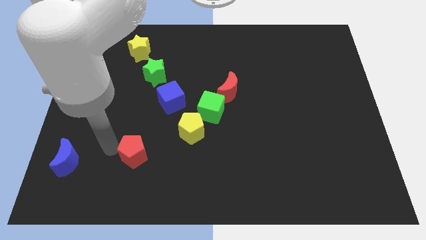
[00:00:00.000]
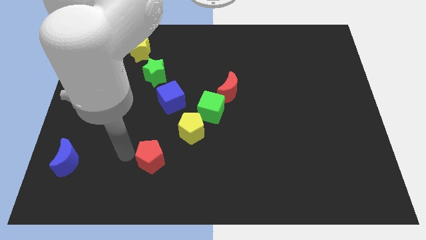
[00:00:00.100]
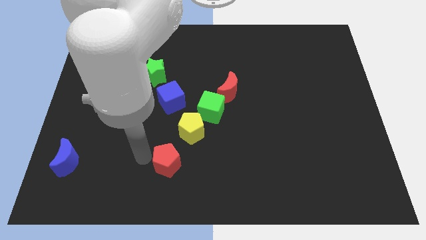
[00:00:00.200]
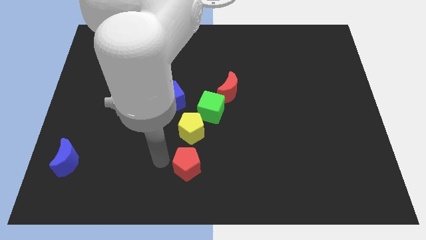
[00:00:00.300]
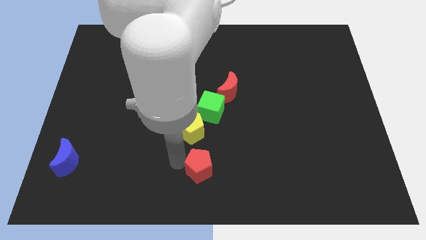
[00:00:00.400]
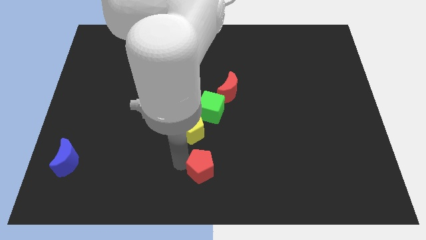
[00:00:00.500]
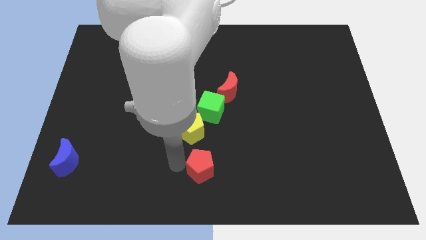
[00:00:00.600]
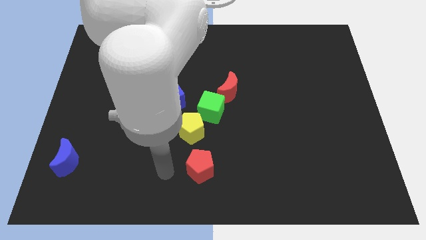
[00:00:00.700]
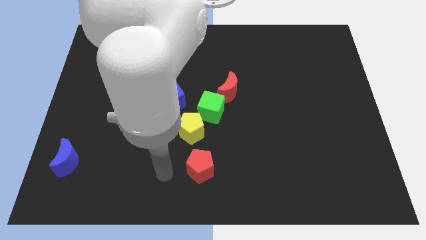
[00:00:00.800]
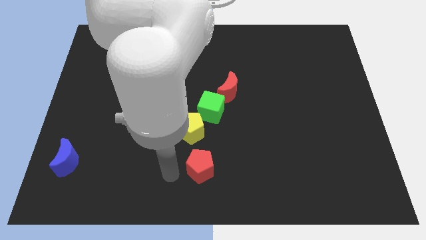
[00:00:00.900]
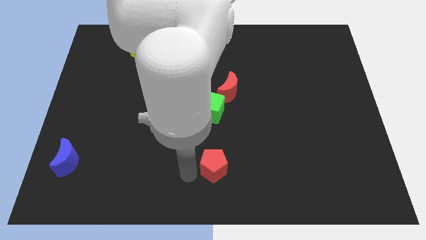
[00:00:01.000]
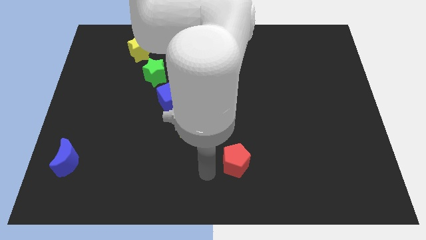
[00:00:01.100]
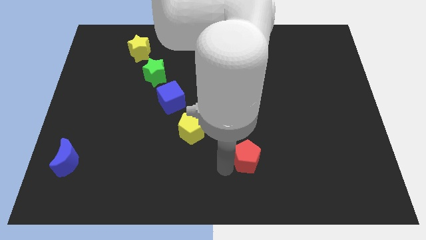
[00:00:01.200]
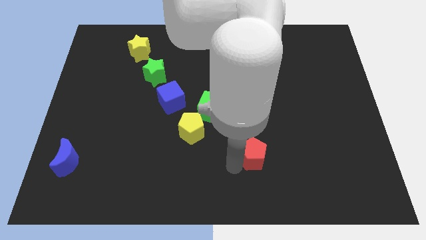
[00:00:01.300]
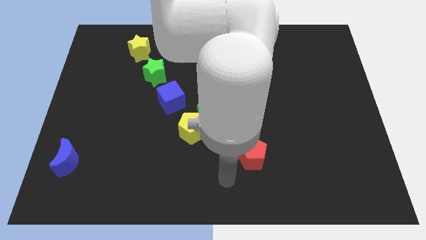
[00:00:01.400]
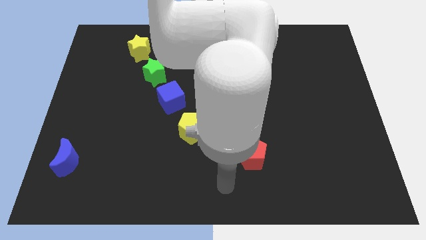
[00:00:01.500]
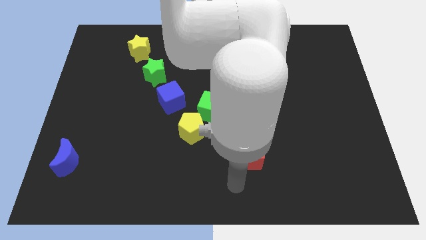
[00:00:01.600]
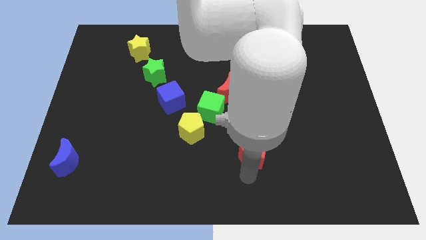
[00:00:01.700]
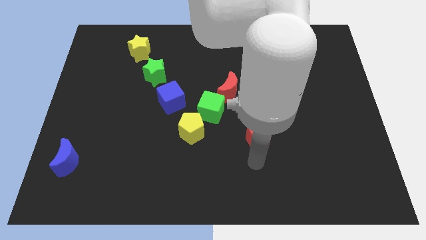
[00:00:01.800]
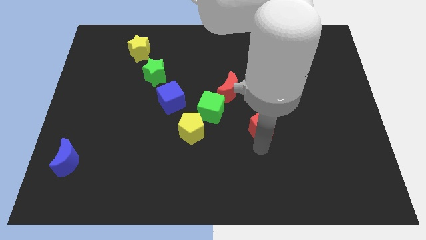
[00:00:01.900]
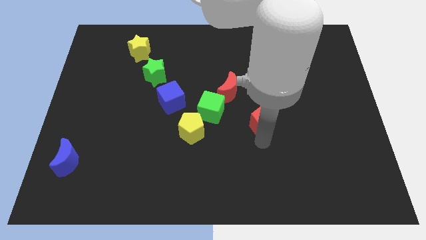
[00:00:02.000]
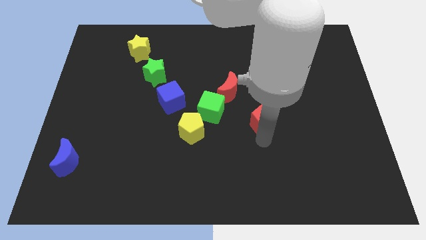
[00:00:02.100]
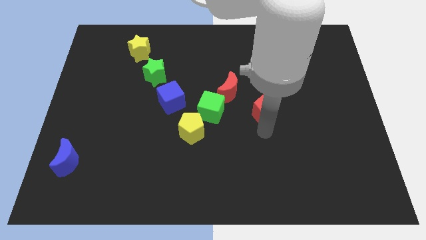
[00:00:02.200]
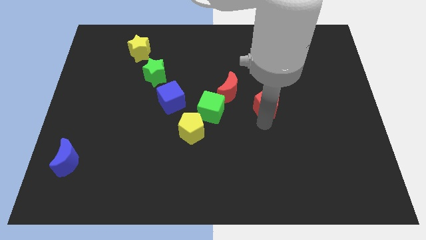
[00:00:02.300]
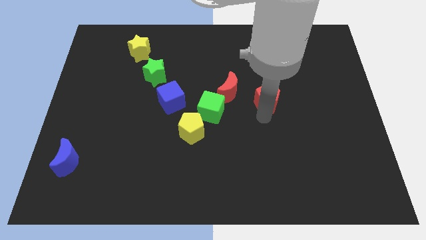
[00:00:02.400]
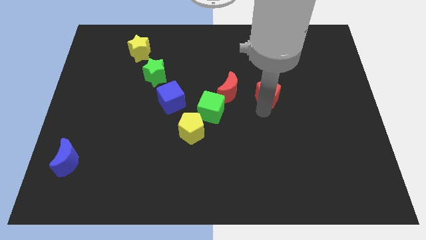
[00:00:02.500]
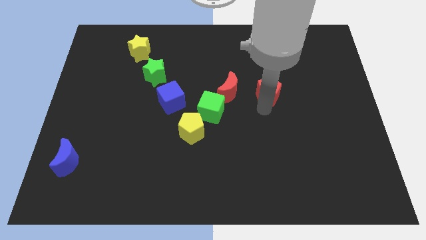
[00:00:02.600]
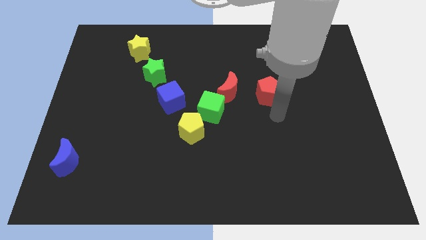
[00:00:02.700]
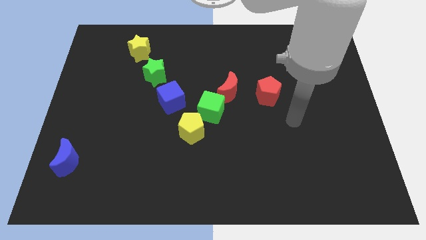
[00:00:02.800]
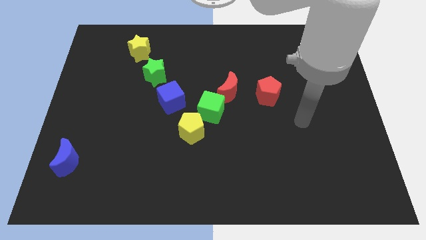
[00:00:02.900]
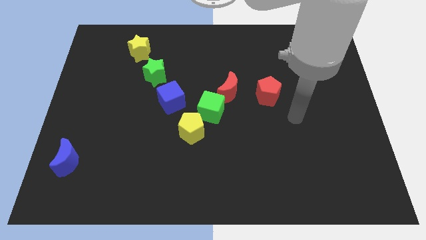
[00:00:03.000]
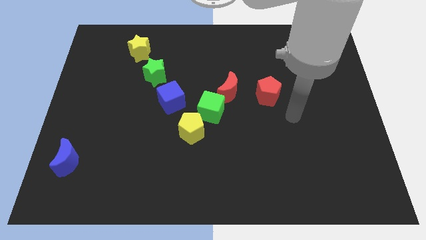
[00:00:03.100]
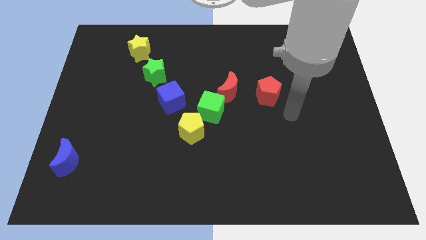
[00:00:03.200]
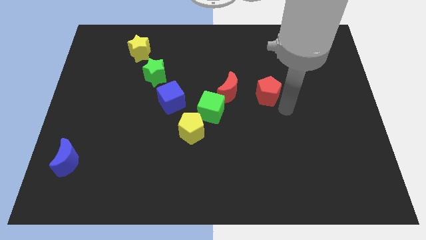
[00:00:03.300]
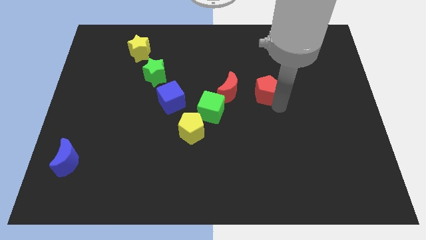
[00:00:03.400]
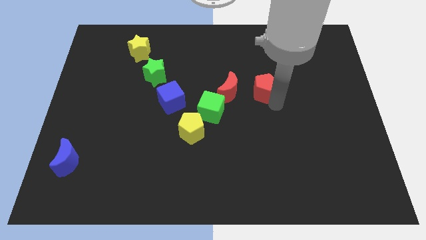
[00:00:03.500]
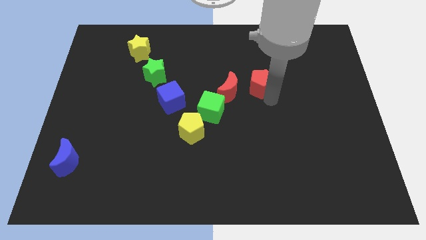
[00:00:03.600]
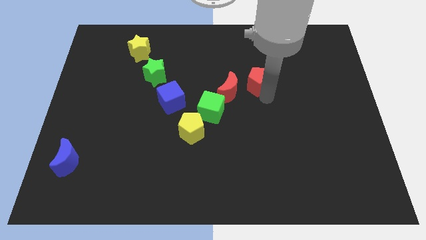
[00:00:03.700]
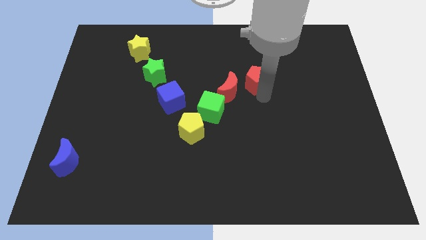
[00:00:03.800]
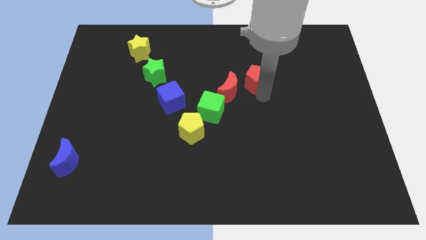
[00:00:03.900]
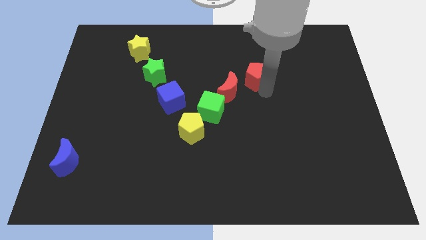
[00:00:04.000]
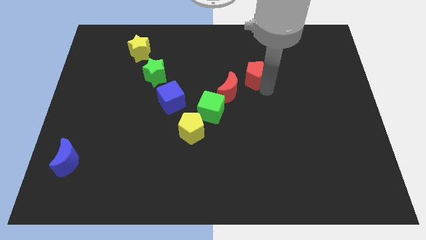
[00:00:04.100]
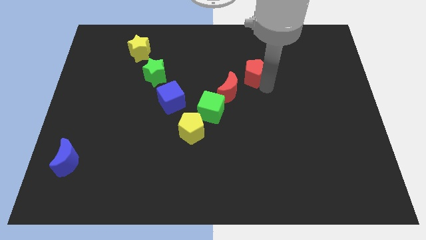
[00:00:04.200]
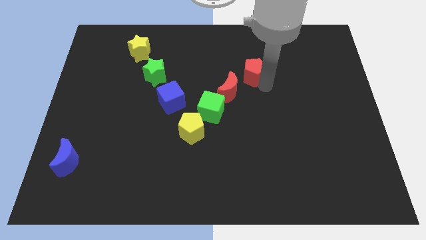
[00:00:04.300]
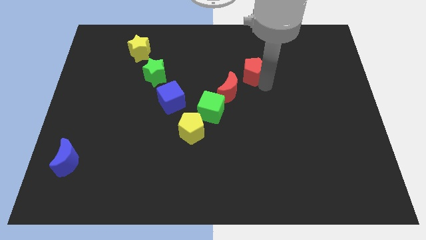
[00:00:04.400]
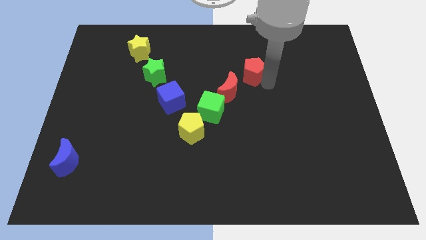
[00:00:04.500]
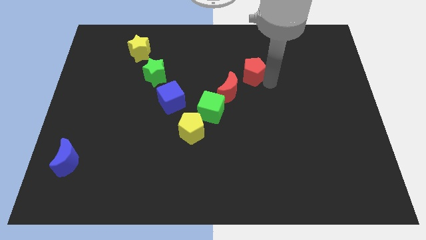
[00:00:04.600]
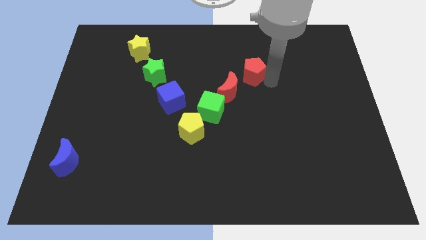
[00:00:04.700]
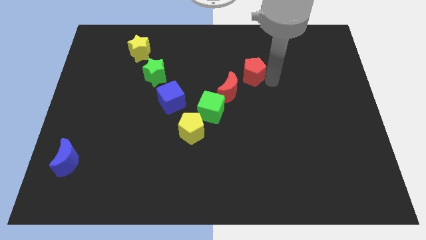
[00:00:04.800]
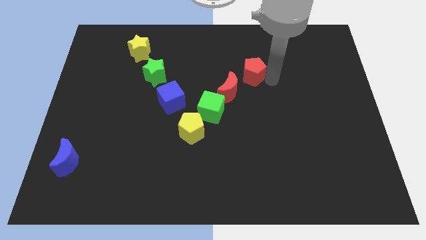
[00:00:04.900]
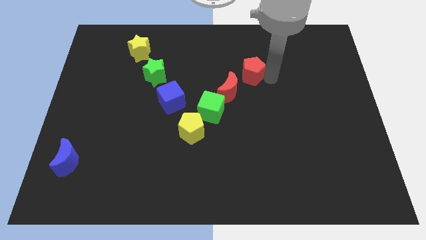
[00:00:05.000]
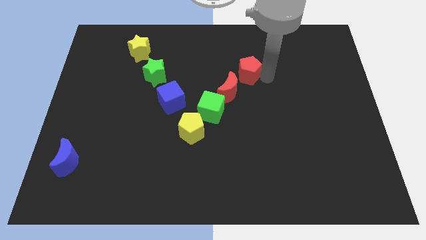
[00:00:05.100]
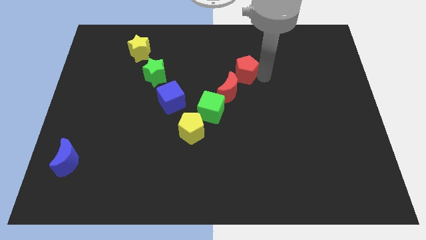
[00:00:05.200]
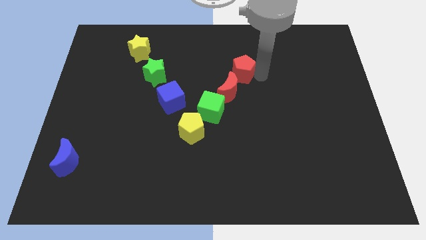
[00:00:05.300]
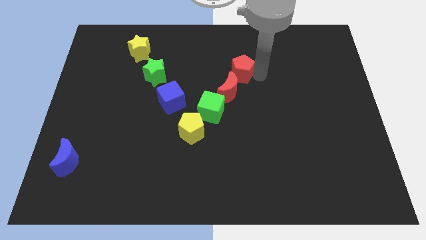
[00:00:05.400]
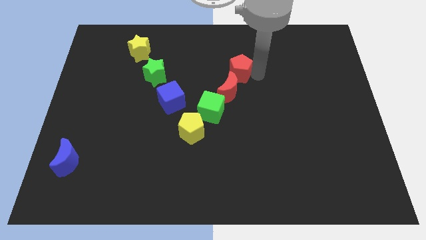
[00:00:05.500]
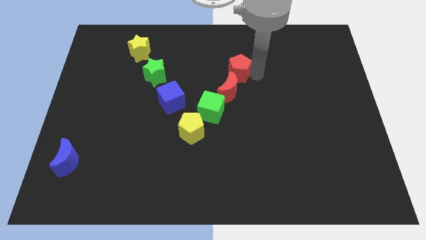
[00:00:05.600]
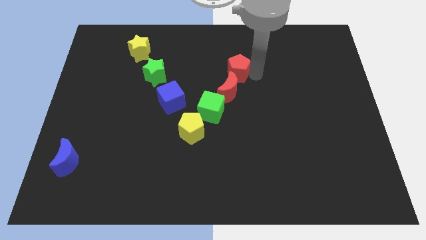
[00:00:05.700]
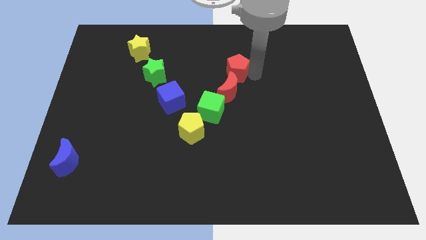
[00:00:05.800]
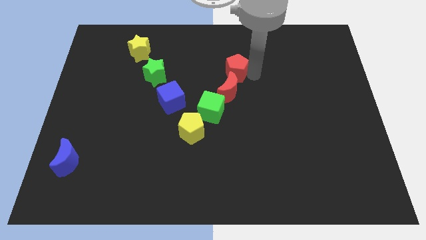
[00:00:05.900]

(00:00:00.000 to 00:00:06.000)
place the red pentagon to the top right of red crescent

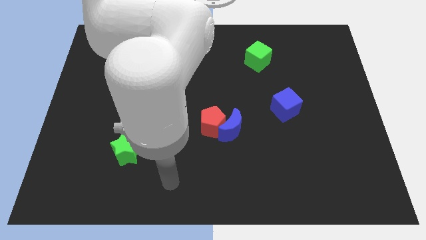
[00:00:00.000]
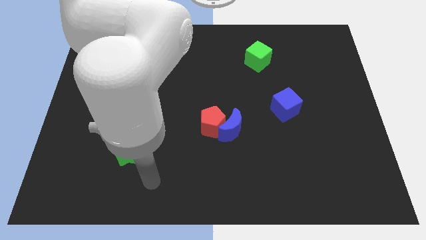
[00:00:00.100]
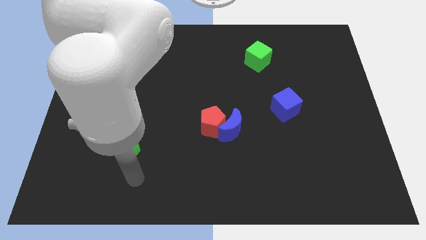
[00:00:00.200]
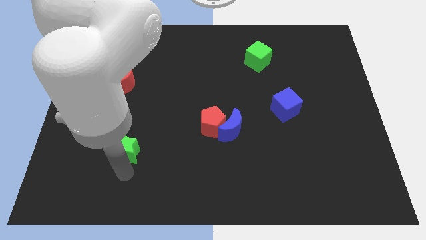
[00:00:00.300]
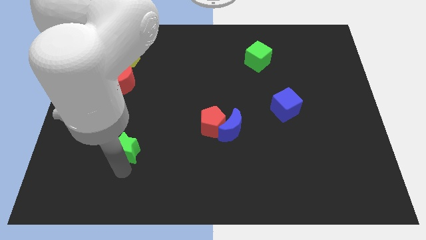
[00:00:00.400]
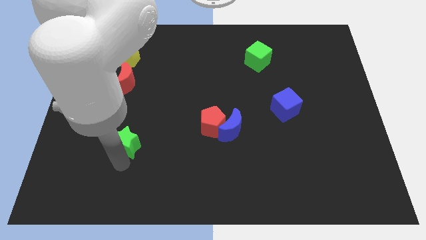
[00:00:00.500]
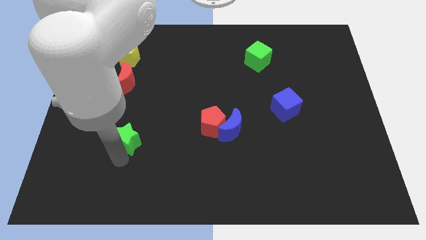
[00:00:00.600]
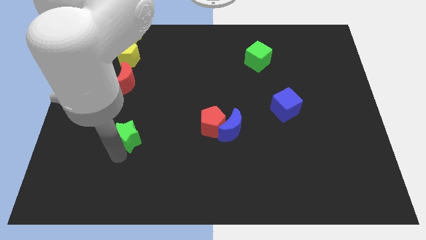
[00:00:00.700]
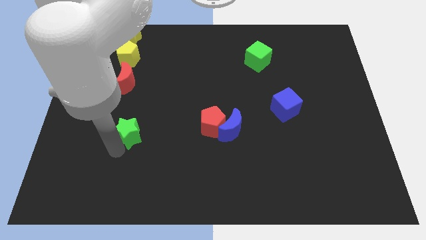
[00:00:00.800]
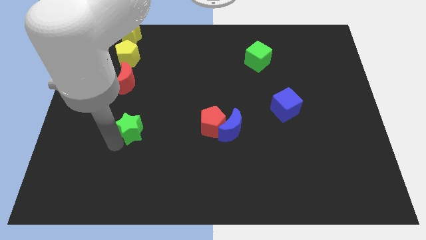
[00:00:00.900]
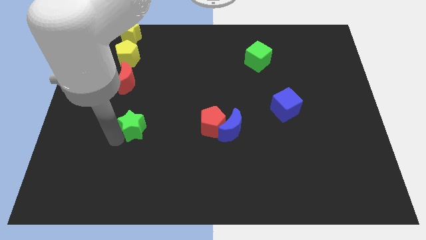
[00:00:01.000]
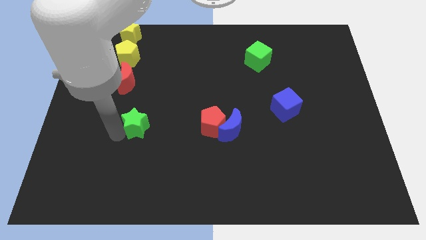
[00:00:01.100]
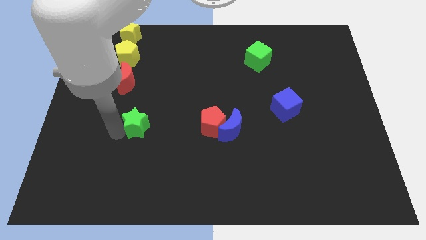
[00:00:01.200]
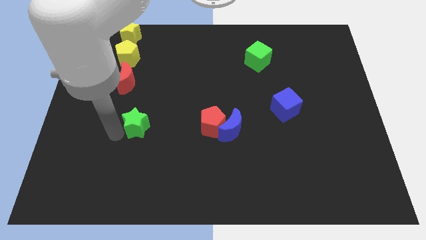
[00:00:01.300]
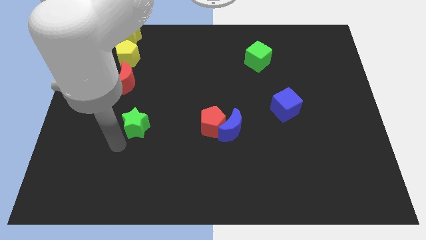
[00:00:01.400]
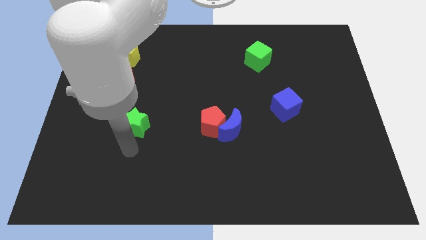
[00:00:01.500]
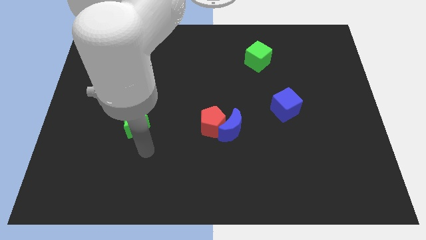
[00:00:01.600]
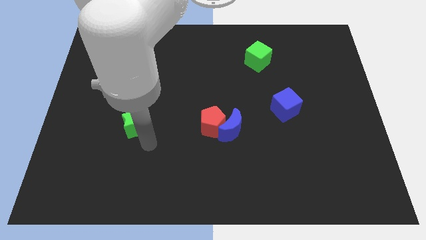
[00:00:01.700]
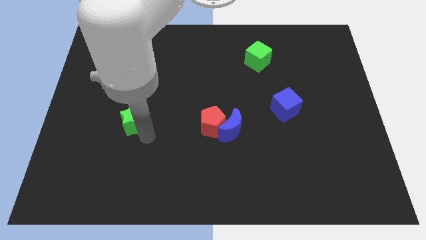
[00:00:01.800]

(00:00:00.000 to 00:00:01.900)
place the green star left to the red pentagon

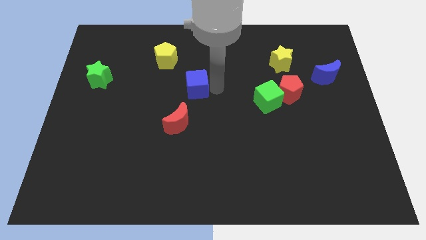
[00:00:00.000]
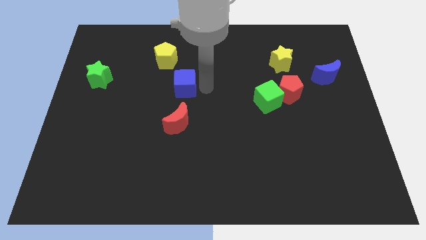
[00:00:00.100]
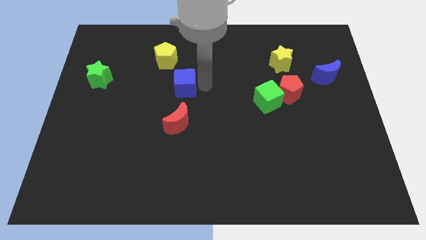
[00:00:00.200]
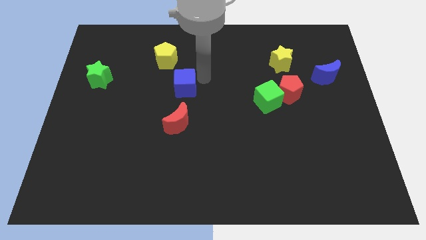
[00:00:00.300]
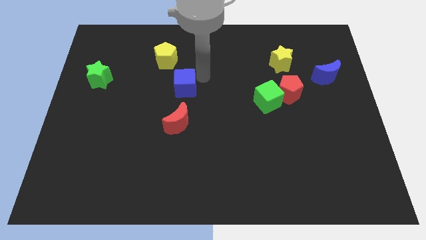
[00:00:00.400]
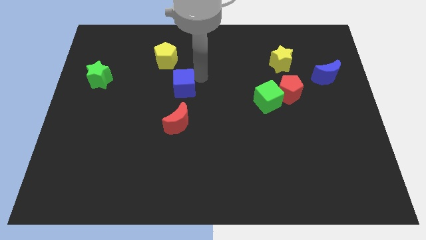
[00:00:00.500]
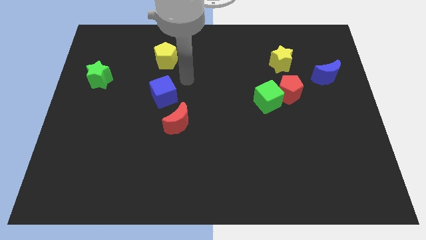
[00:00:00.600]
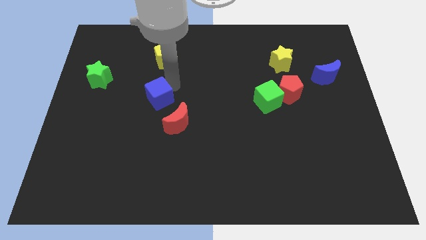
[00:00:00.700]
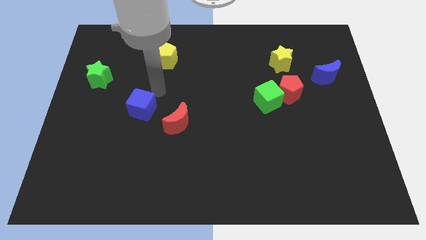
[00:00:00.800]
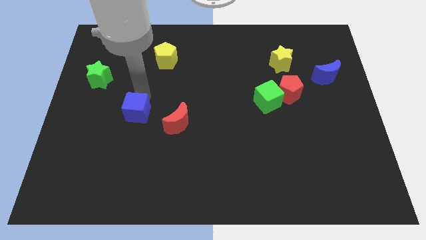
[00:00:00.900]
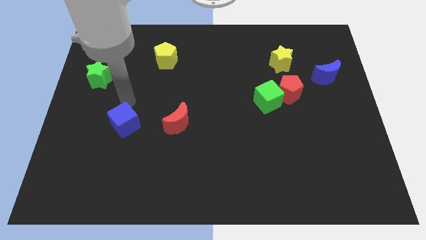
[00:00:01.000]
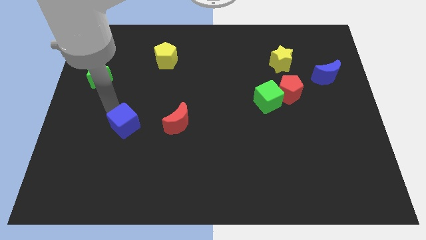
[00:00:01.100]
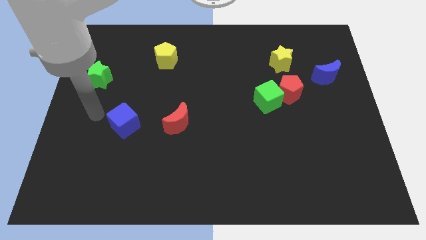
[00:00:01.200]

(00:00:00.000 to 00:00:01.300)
push blue cube towards left
